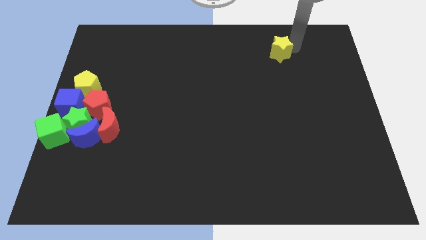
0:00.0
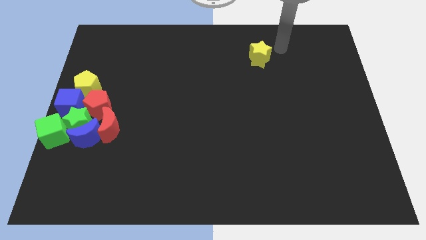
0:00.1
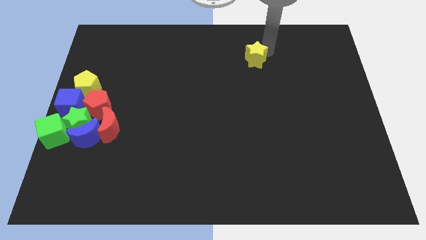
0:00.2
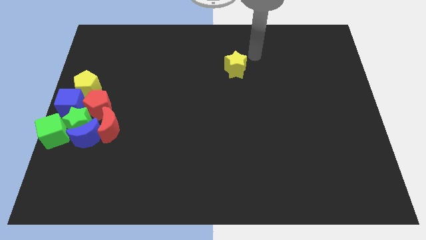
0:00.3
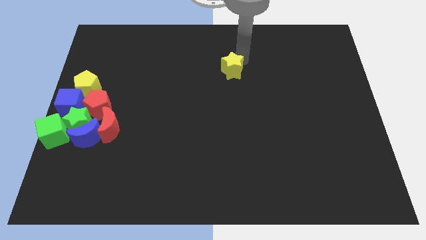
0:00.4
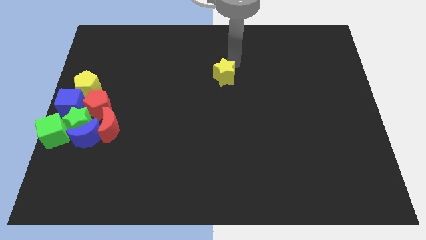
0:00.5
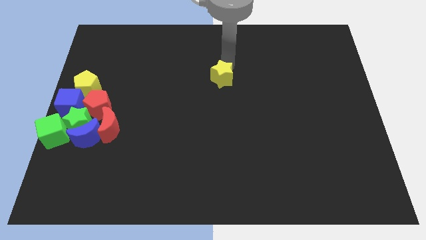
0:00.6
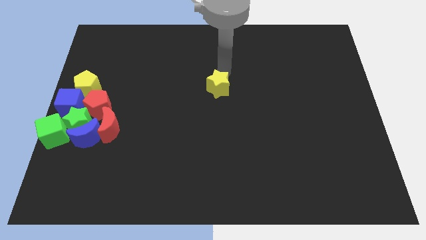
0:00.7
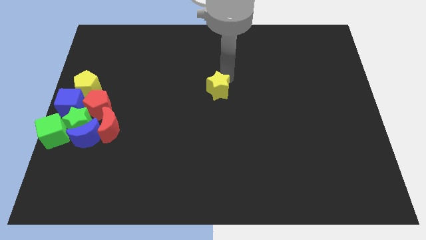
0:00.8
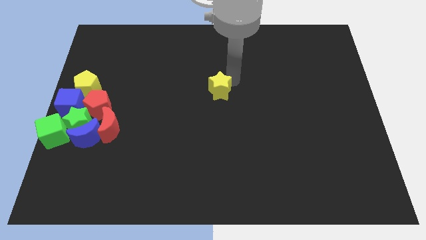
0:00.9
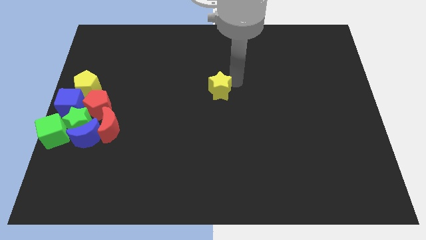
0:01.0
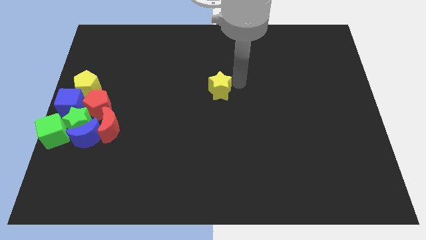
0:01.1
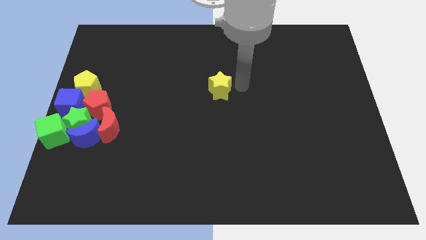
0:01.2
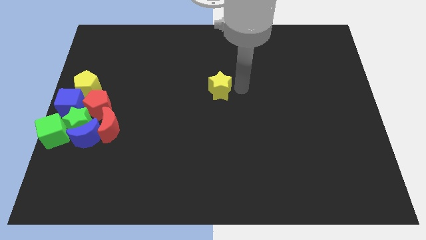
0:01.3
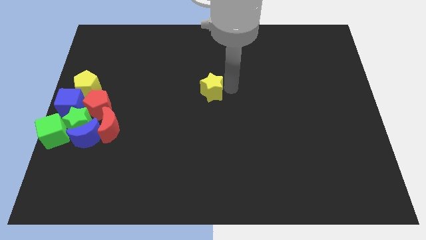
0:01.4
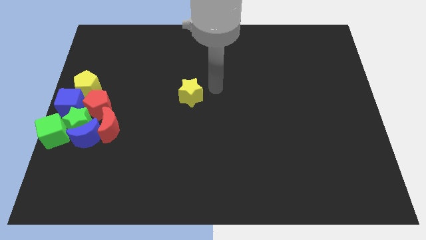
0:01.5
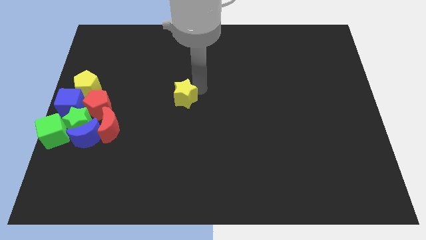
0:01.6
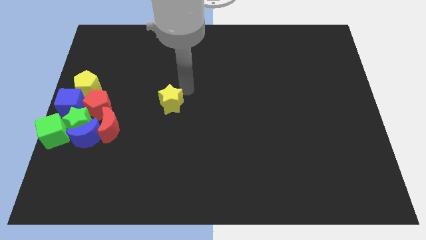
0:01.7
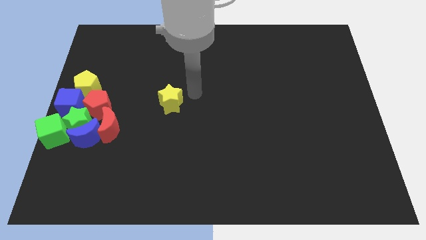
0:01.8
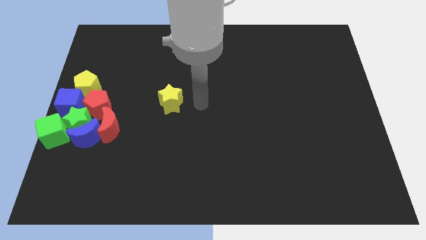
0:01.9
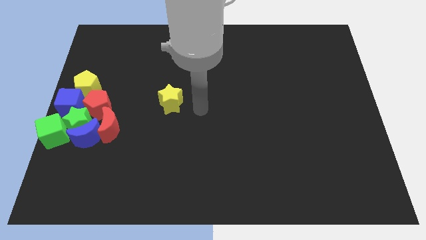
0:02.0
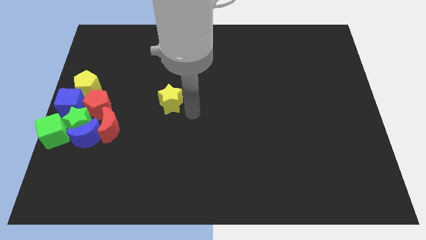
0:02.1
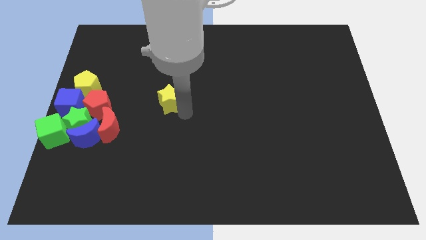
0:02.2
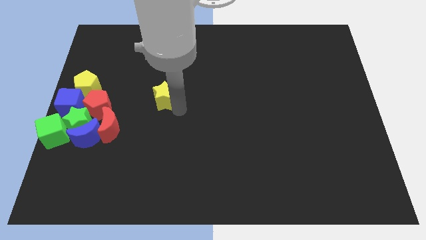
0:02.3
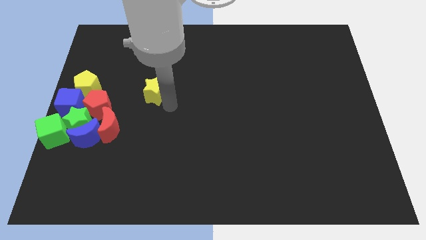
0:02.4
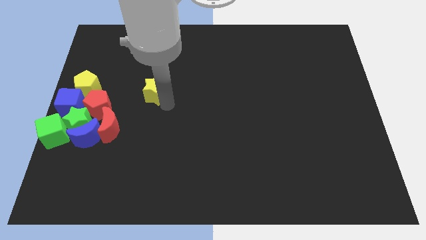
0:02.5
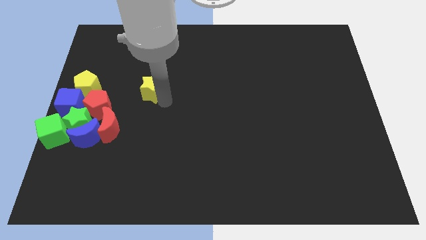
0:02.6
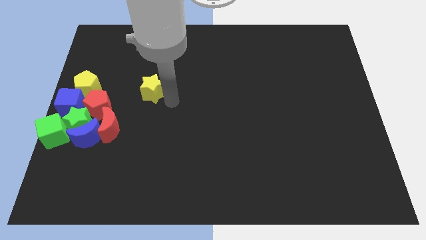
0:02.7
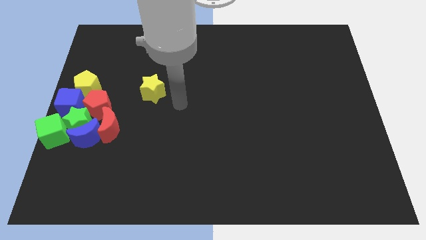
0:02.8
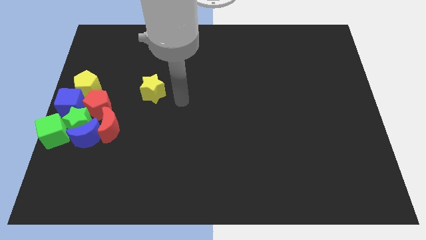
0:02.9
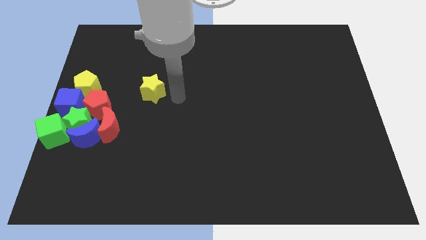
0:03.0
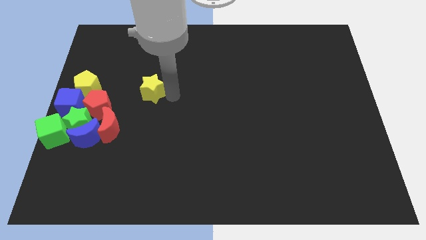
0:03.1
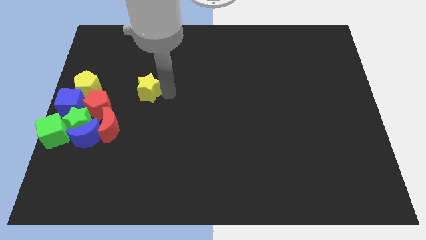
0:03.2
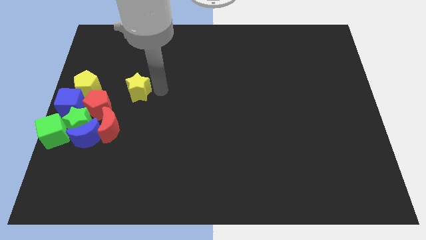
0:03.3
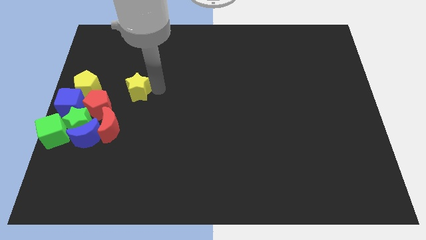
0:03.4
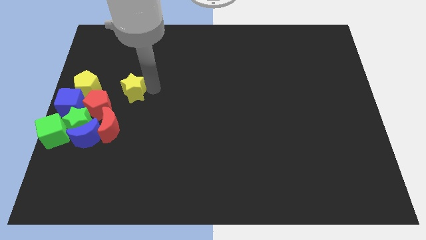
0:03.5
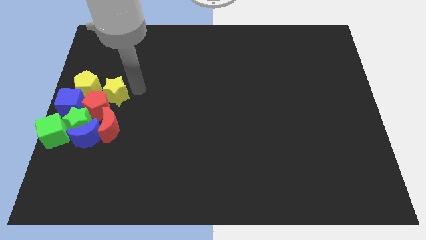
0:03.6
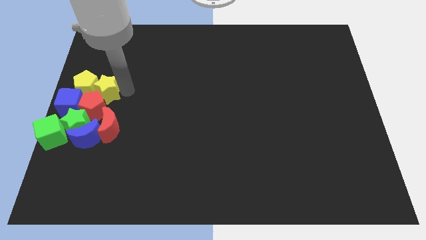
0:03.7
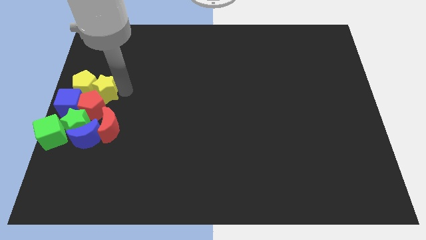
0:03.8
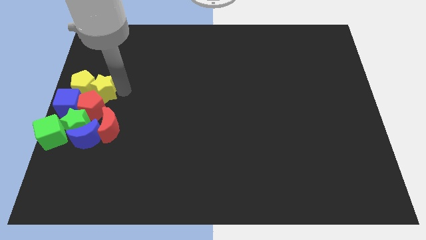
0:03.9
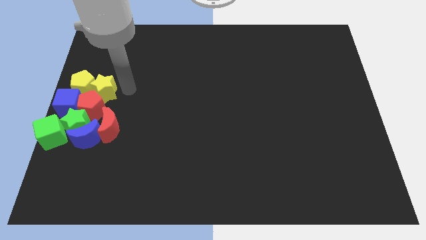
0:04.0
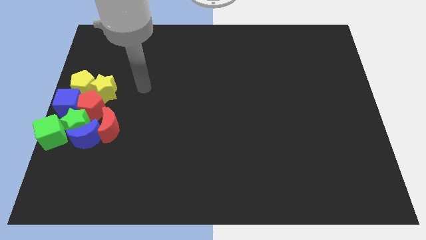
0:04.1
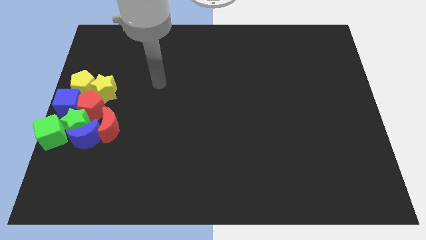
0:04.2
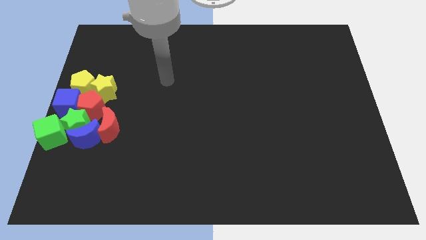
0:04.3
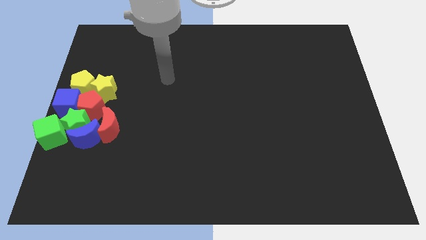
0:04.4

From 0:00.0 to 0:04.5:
drag the yellow star into the group of blocks

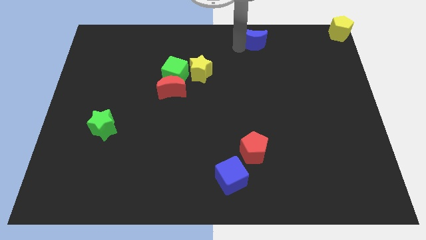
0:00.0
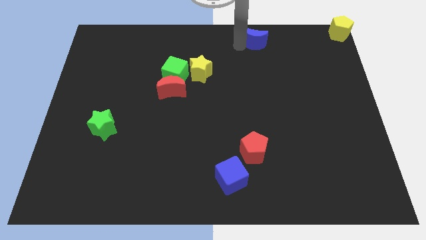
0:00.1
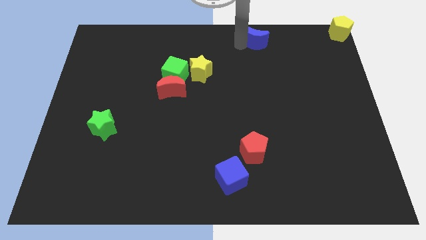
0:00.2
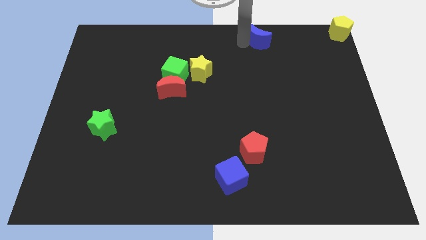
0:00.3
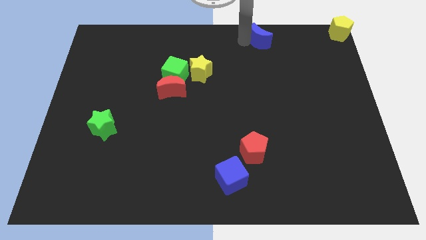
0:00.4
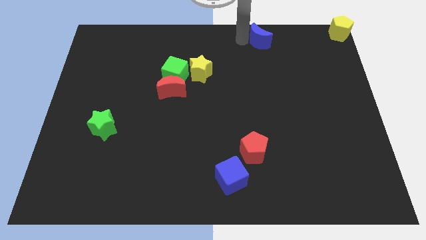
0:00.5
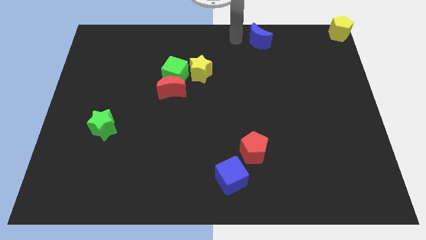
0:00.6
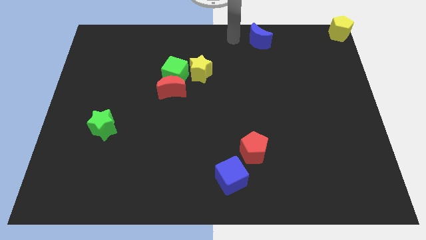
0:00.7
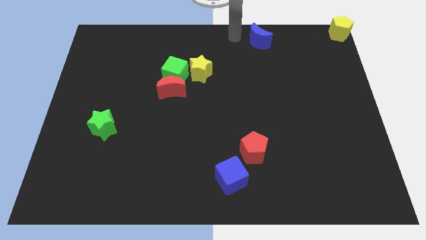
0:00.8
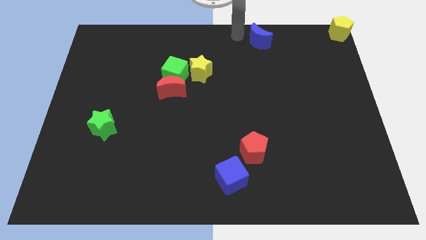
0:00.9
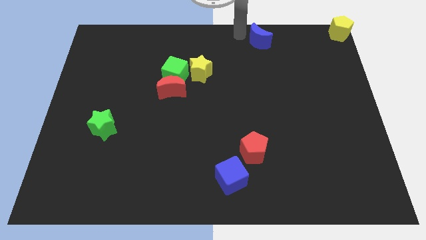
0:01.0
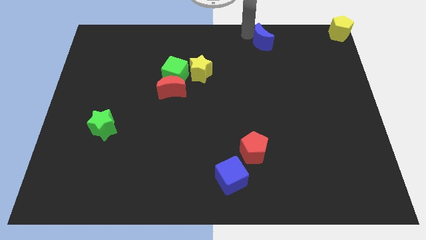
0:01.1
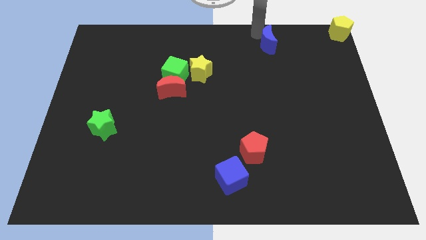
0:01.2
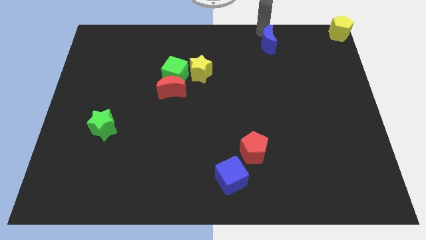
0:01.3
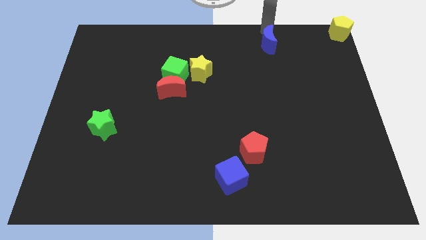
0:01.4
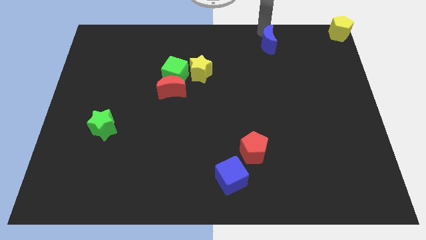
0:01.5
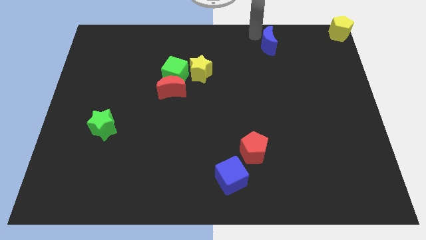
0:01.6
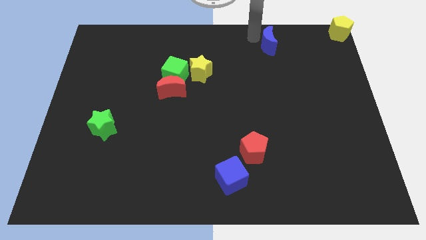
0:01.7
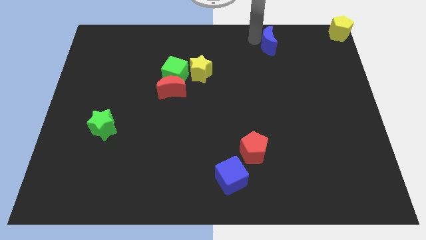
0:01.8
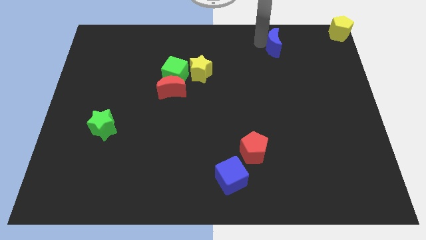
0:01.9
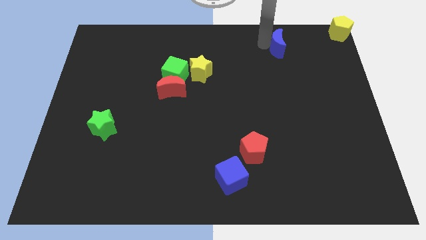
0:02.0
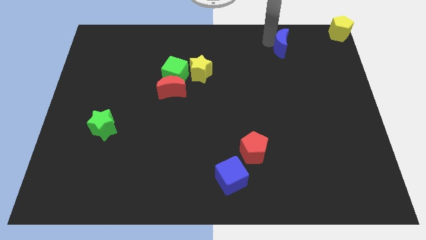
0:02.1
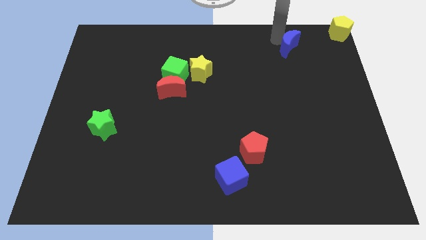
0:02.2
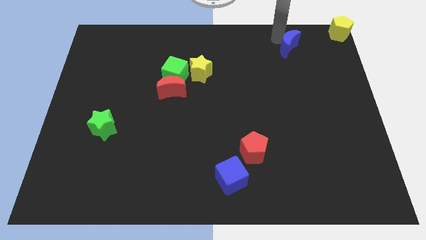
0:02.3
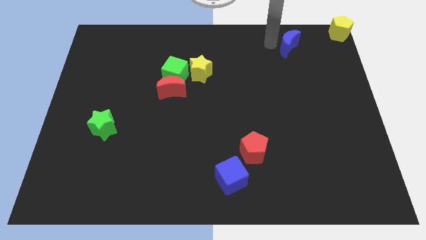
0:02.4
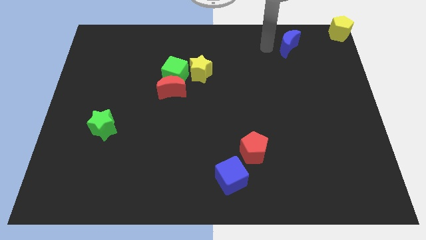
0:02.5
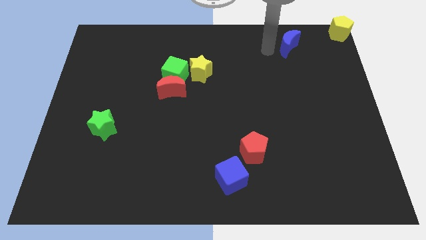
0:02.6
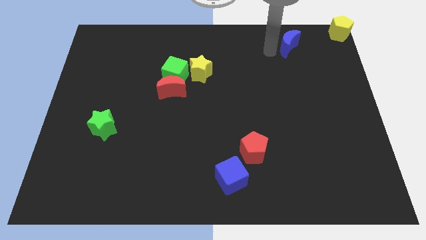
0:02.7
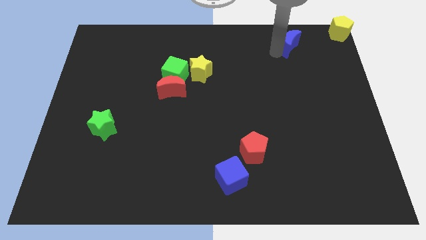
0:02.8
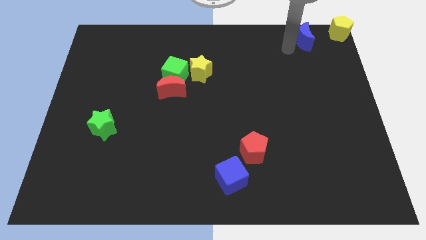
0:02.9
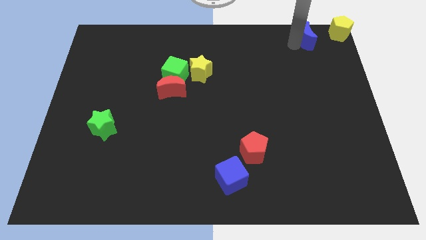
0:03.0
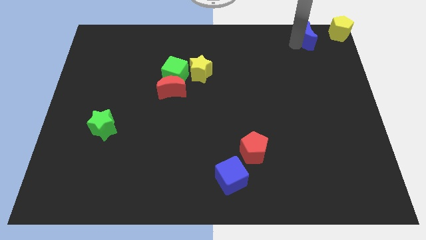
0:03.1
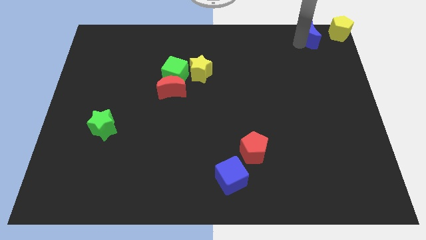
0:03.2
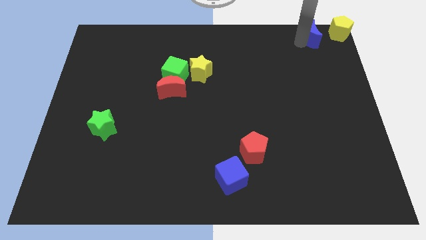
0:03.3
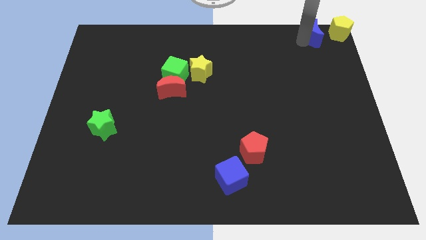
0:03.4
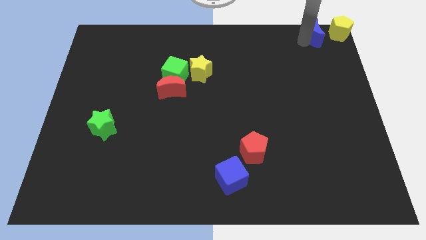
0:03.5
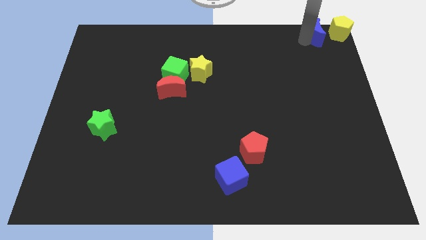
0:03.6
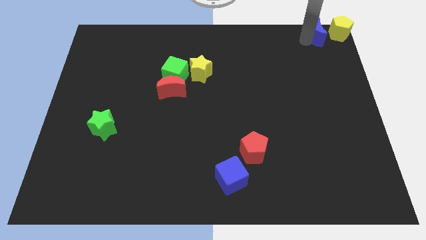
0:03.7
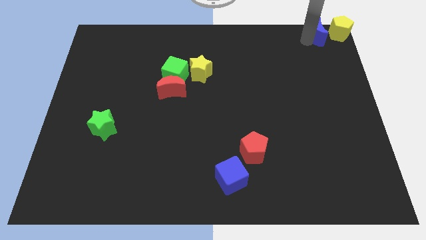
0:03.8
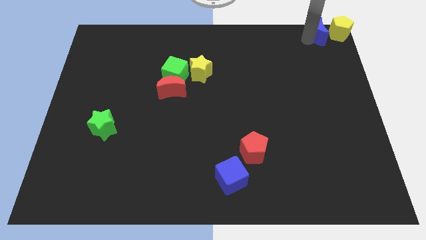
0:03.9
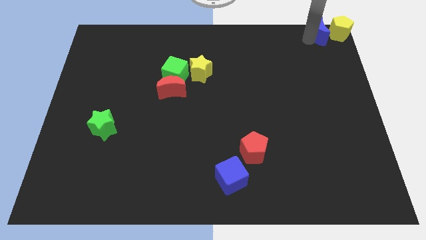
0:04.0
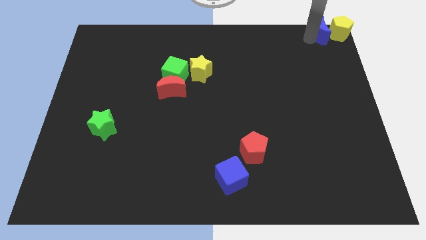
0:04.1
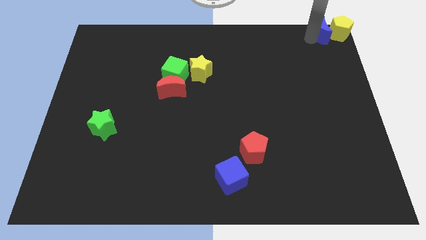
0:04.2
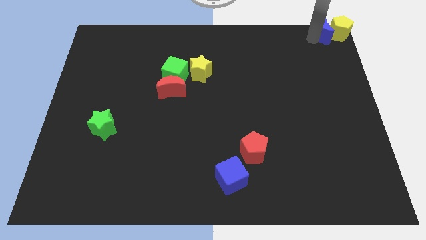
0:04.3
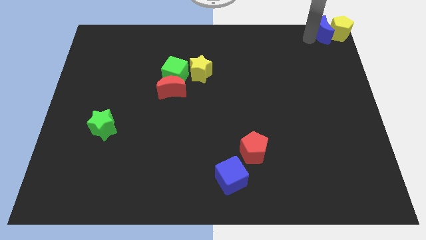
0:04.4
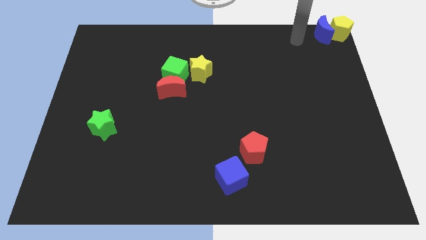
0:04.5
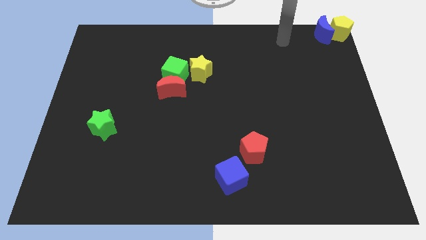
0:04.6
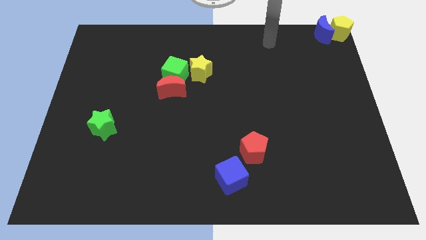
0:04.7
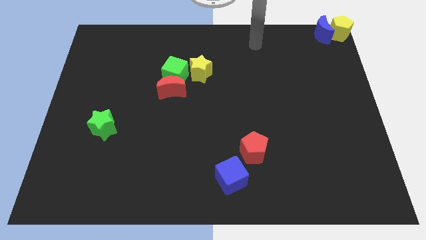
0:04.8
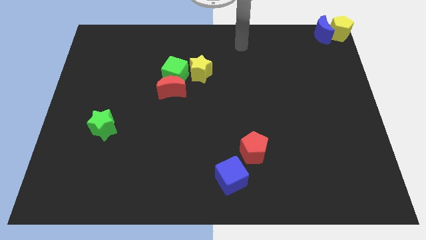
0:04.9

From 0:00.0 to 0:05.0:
move the blue moon to the left of the yellow pentagon
